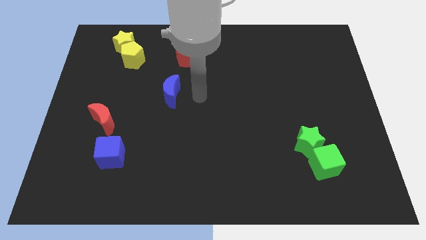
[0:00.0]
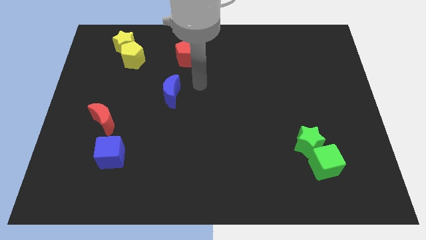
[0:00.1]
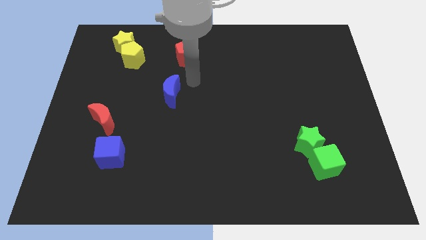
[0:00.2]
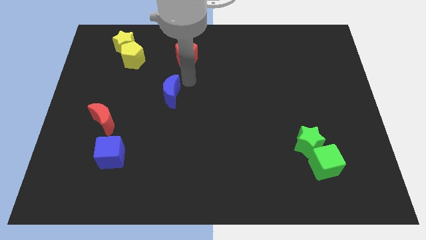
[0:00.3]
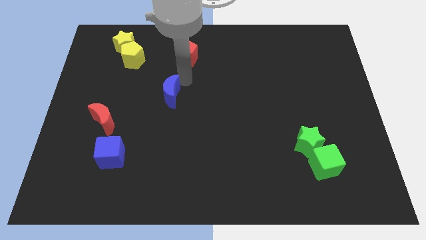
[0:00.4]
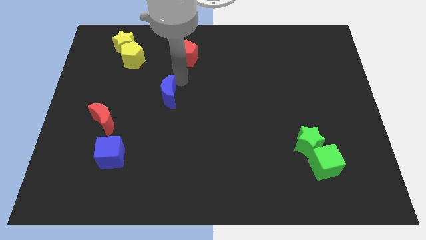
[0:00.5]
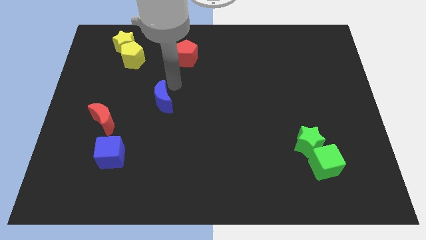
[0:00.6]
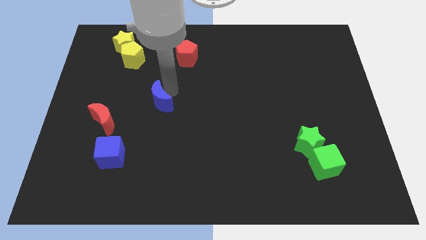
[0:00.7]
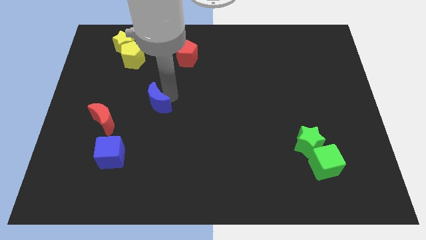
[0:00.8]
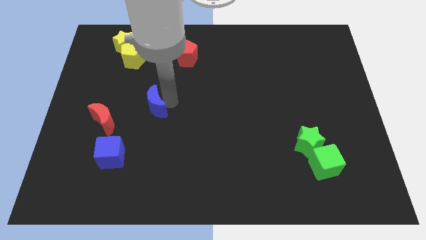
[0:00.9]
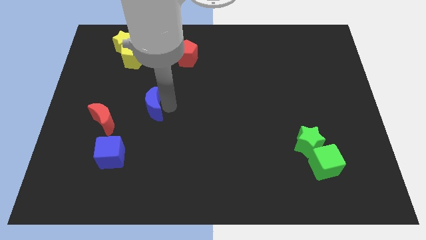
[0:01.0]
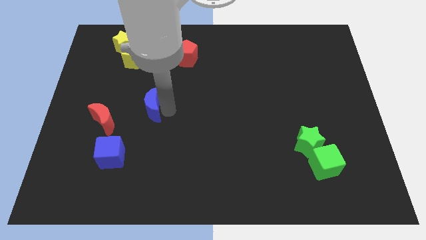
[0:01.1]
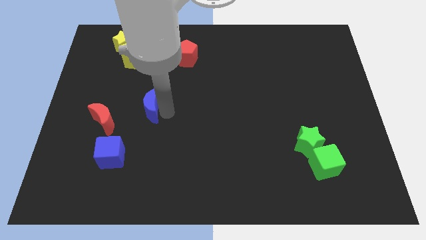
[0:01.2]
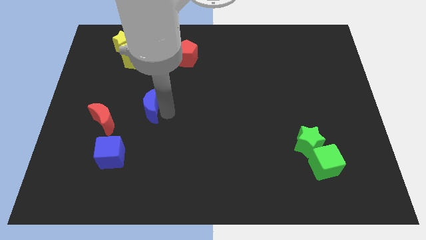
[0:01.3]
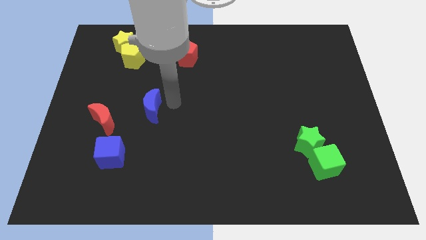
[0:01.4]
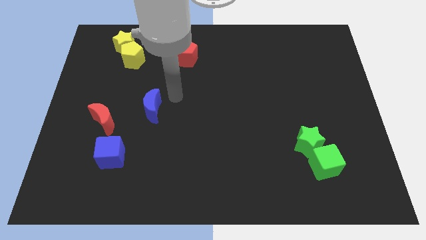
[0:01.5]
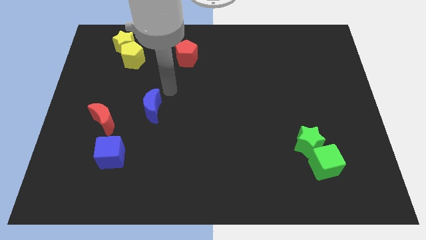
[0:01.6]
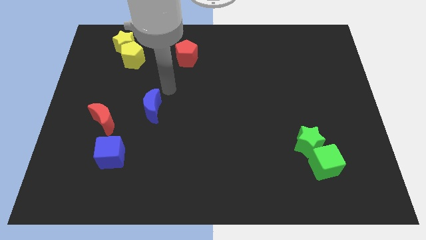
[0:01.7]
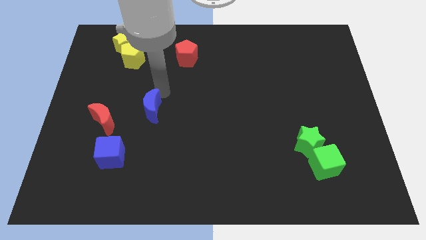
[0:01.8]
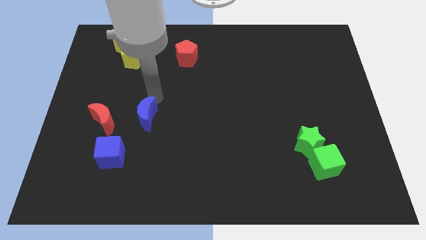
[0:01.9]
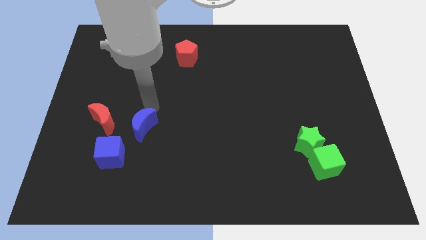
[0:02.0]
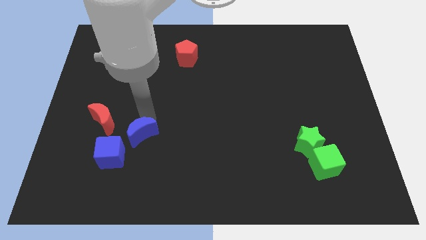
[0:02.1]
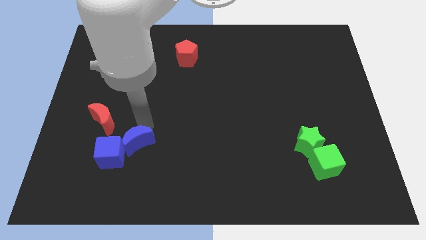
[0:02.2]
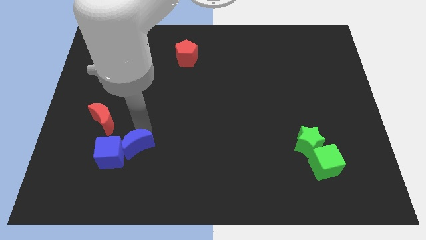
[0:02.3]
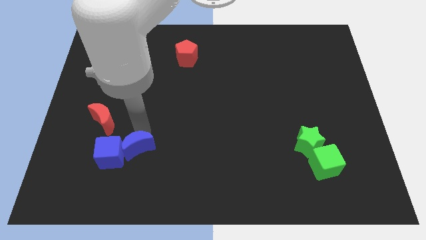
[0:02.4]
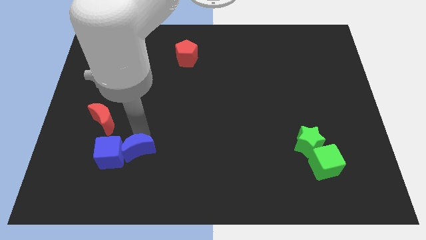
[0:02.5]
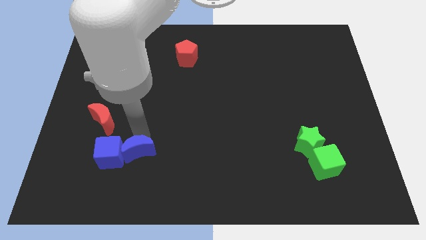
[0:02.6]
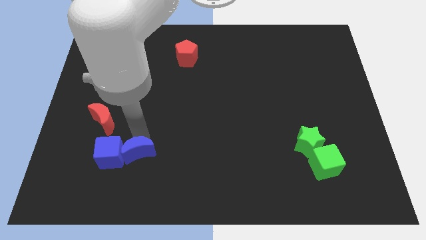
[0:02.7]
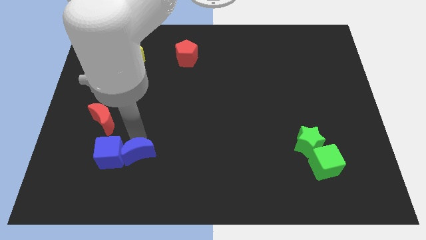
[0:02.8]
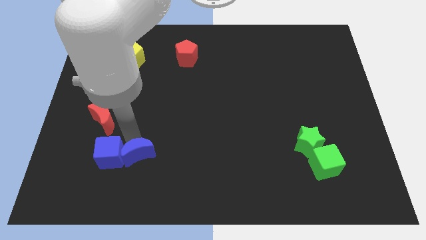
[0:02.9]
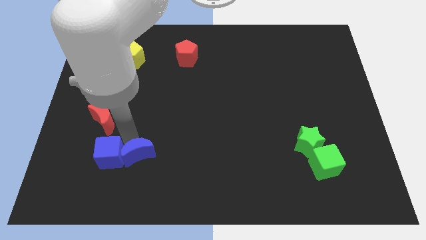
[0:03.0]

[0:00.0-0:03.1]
move the blue moon to the right side of the blue cube

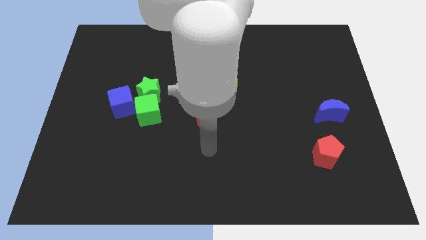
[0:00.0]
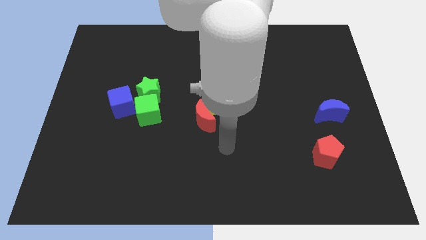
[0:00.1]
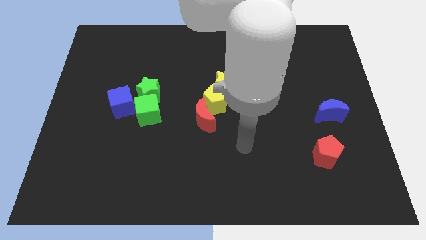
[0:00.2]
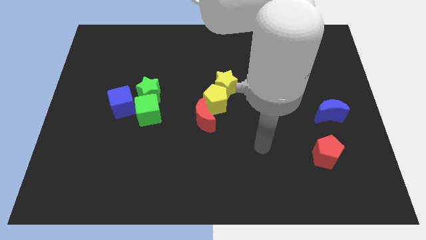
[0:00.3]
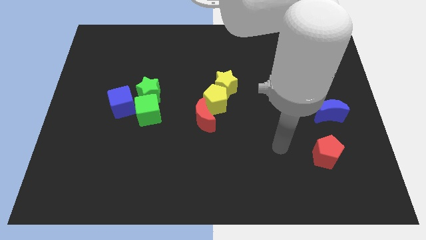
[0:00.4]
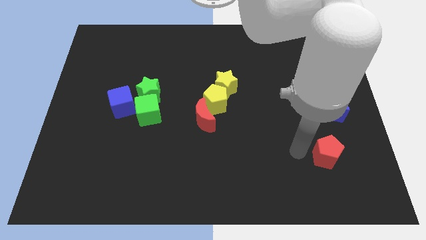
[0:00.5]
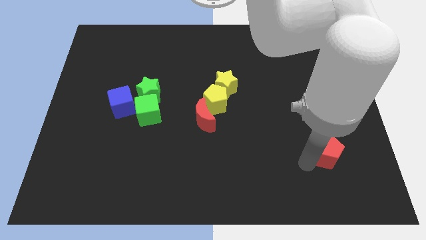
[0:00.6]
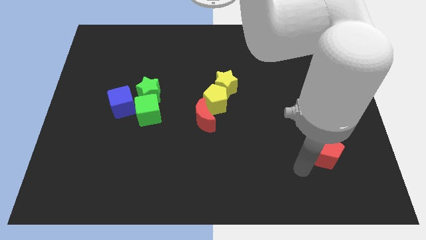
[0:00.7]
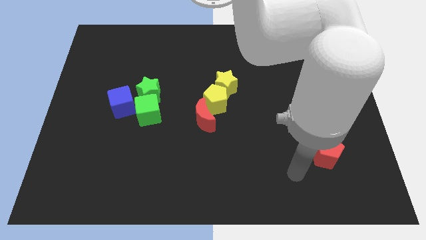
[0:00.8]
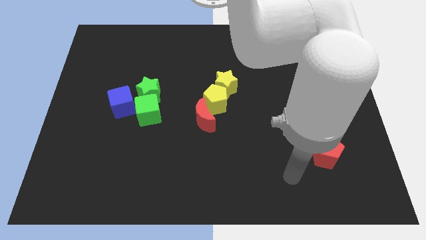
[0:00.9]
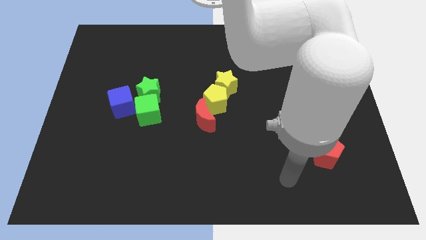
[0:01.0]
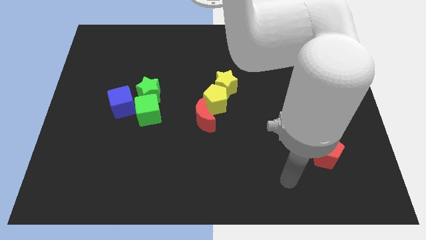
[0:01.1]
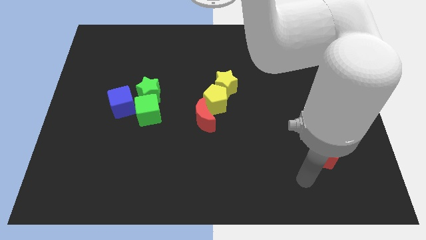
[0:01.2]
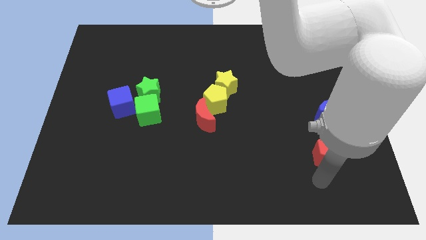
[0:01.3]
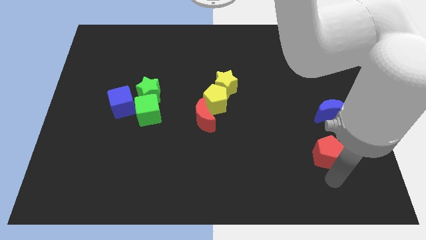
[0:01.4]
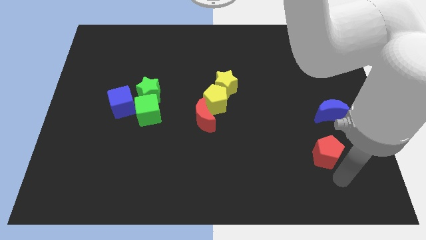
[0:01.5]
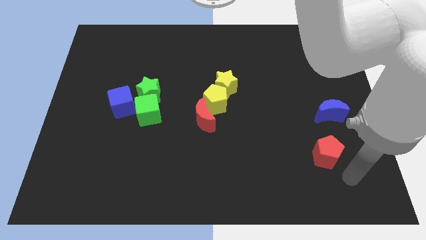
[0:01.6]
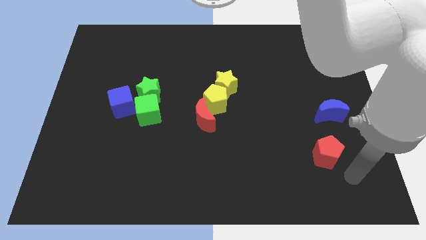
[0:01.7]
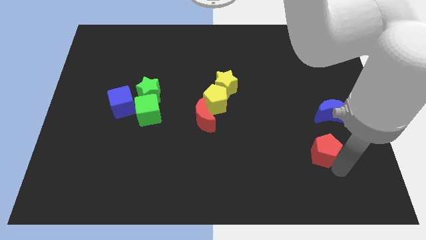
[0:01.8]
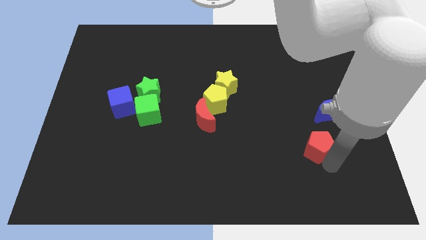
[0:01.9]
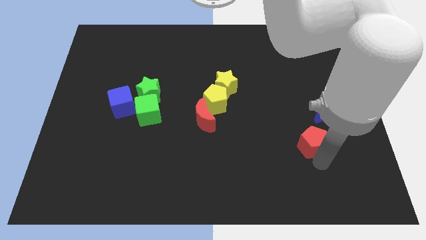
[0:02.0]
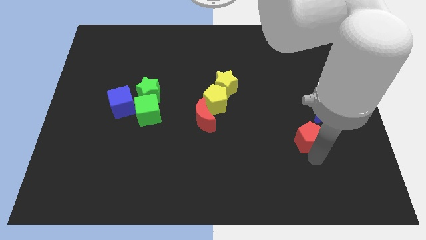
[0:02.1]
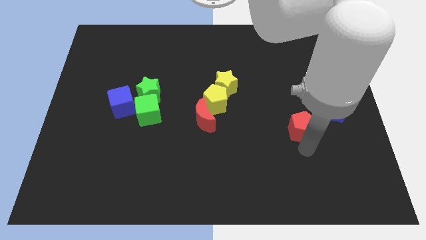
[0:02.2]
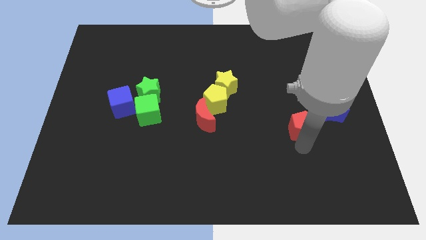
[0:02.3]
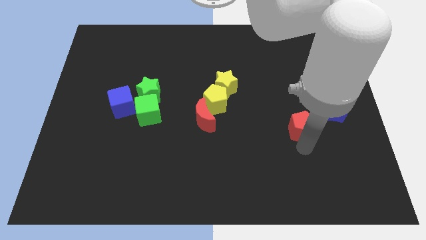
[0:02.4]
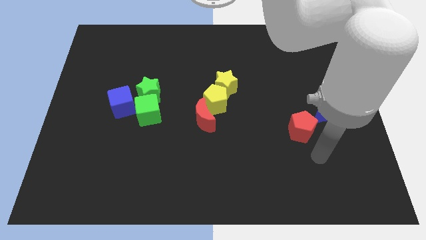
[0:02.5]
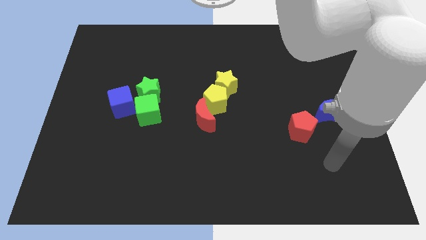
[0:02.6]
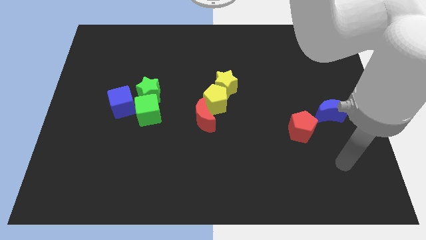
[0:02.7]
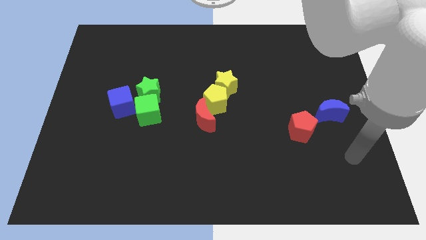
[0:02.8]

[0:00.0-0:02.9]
move the red pentagon to the bottom left of the blue moon

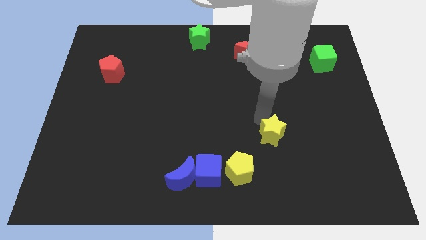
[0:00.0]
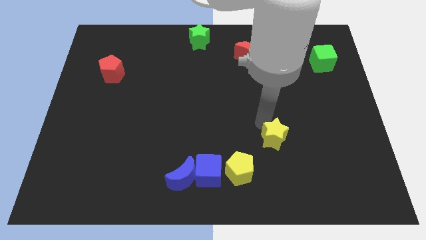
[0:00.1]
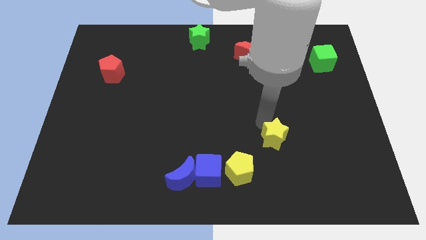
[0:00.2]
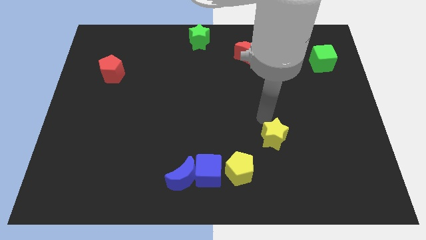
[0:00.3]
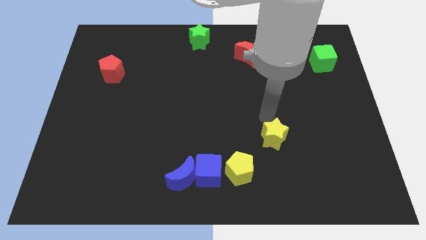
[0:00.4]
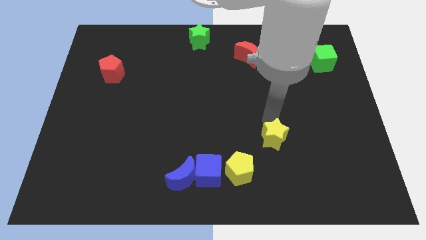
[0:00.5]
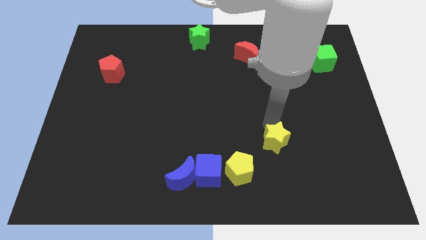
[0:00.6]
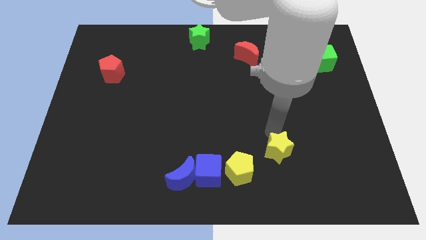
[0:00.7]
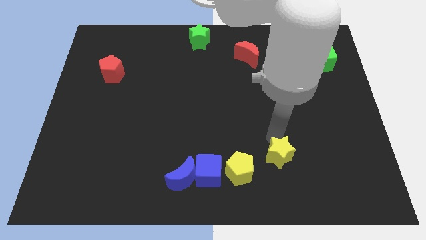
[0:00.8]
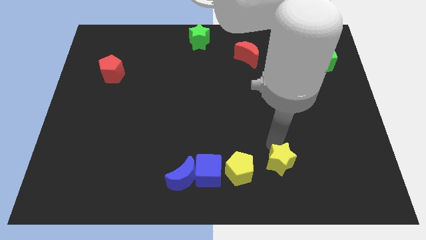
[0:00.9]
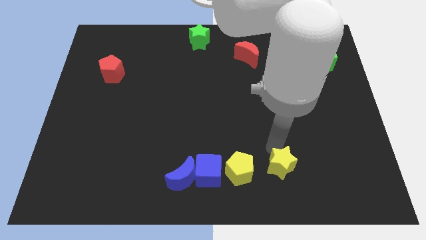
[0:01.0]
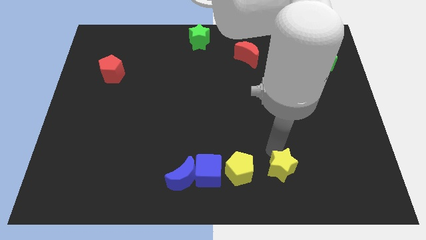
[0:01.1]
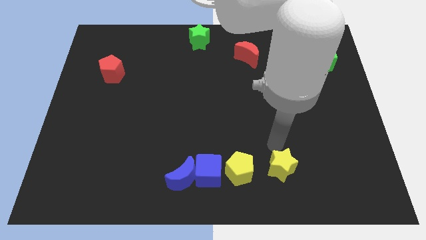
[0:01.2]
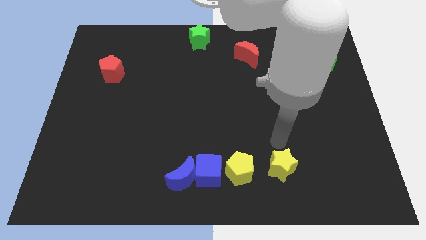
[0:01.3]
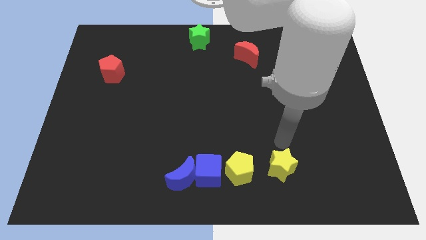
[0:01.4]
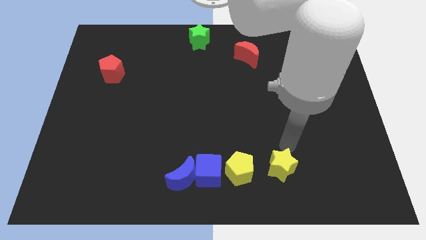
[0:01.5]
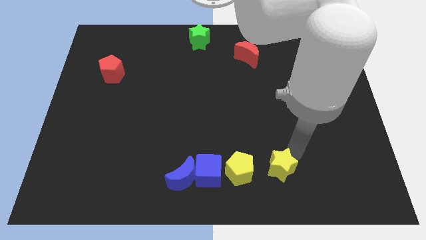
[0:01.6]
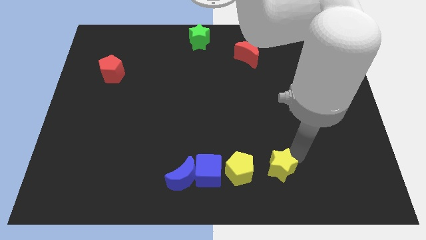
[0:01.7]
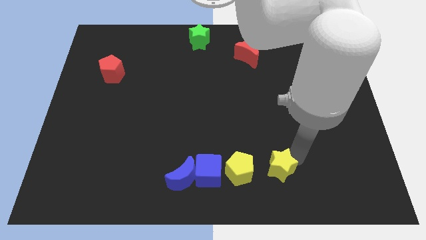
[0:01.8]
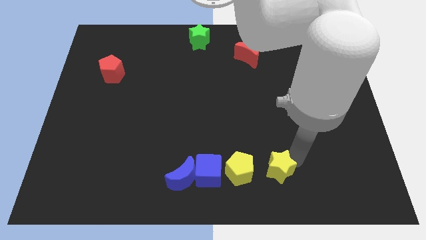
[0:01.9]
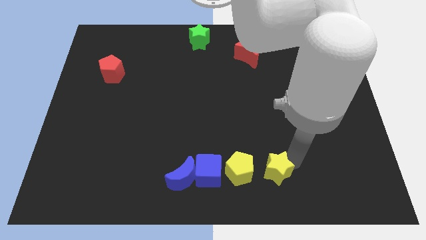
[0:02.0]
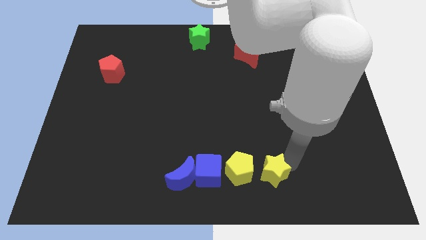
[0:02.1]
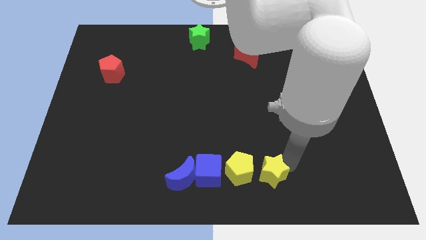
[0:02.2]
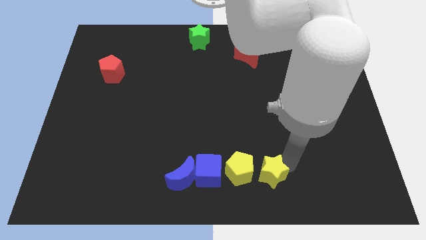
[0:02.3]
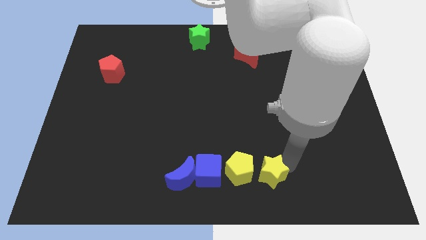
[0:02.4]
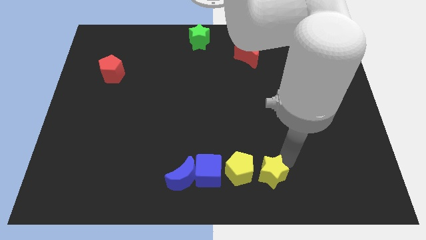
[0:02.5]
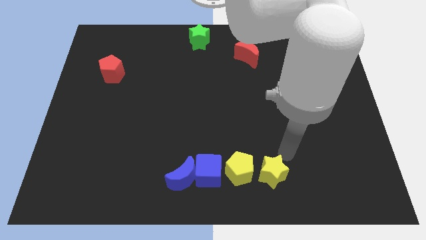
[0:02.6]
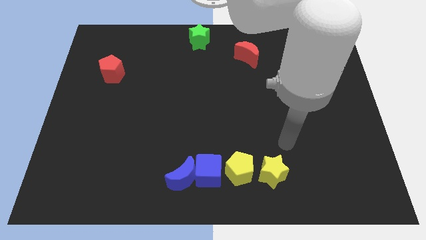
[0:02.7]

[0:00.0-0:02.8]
place the yellow star right to the yellow pentagon

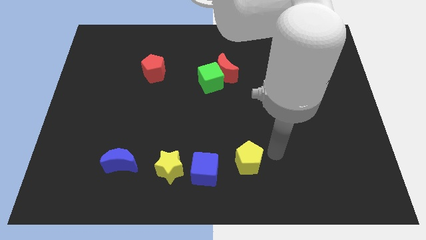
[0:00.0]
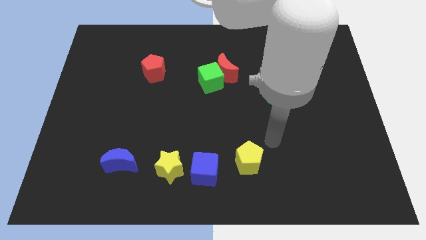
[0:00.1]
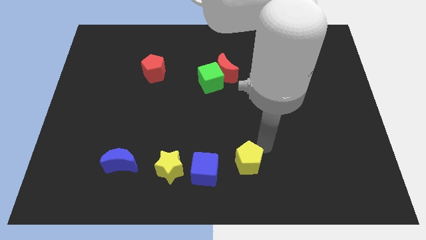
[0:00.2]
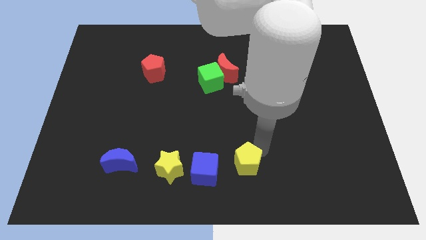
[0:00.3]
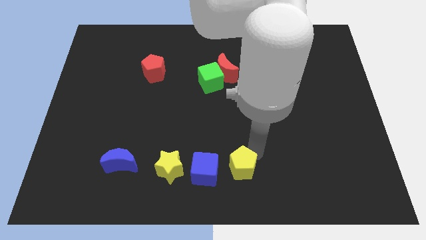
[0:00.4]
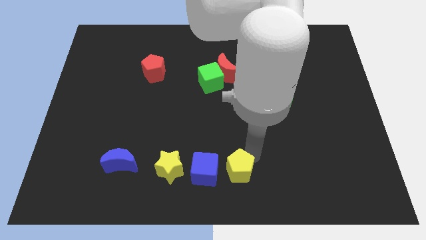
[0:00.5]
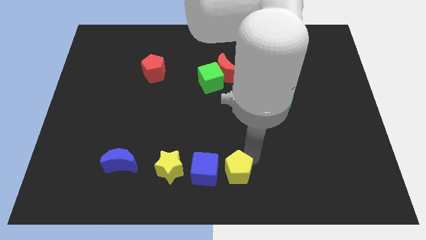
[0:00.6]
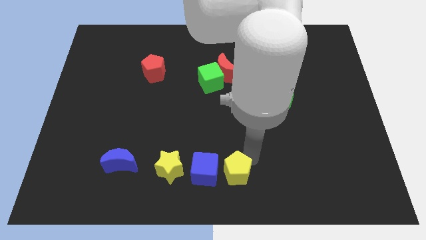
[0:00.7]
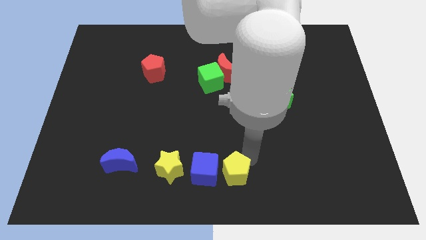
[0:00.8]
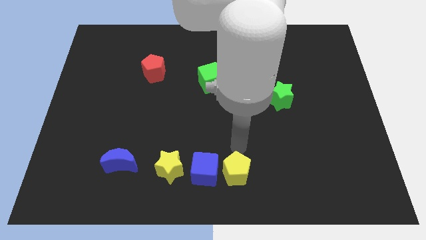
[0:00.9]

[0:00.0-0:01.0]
push the yellow pentagon close to the blue cube
